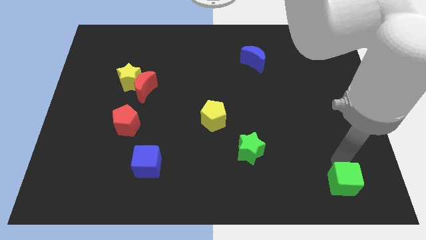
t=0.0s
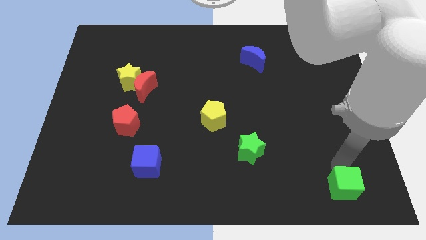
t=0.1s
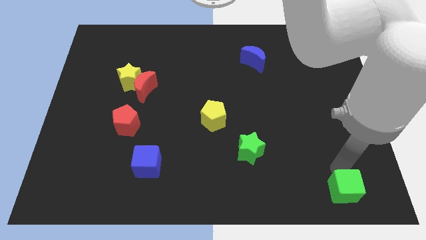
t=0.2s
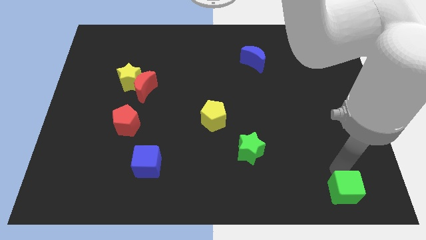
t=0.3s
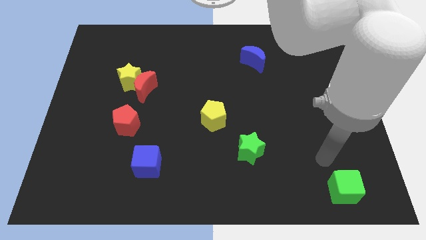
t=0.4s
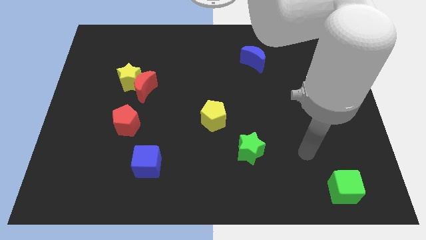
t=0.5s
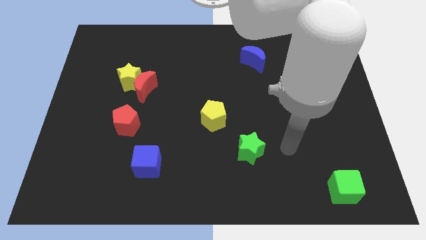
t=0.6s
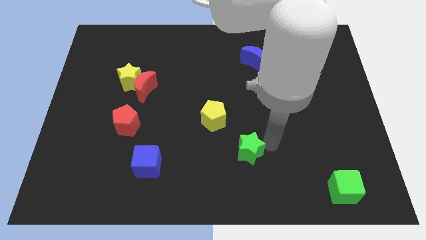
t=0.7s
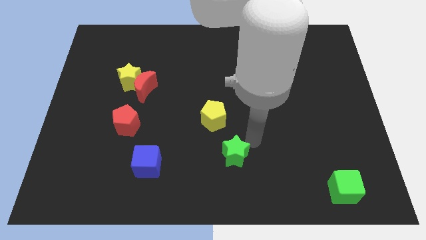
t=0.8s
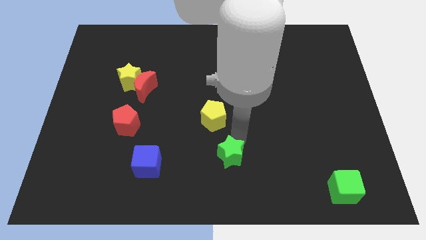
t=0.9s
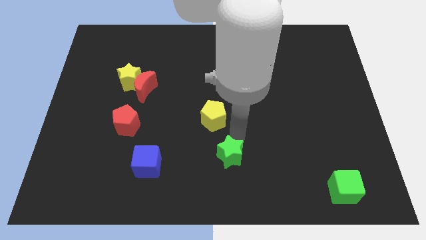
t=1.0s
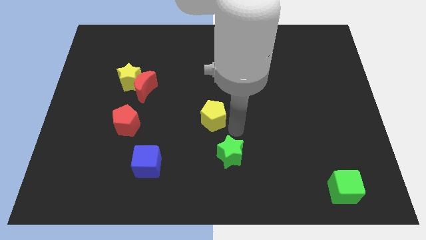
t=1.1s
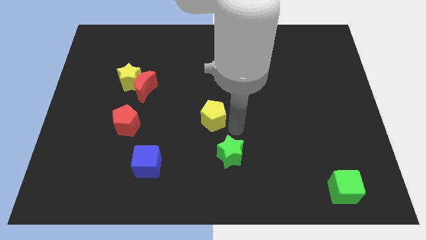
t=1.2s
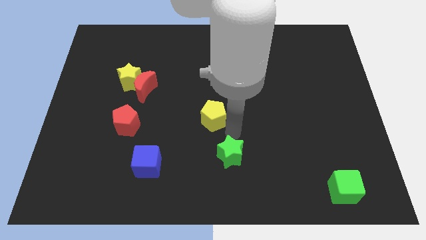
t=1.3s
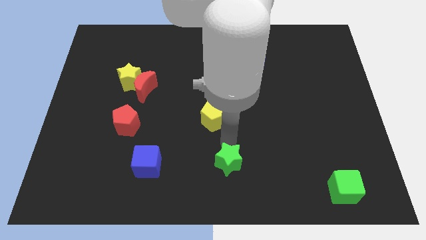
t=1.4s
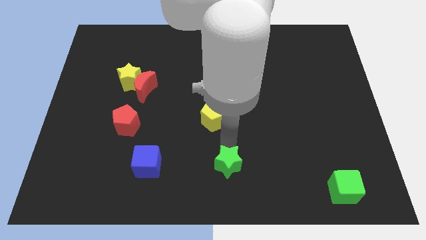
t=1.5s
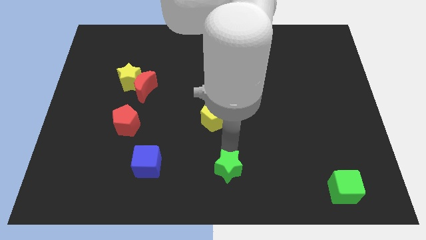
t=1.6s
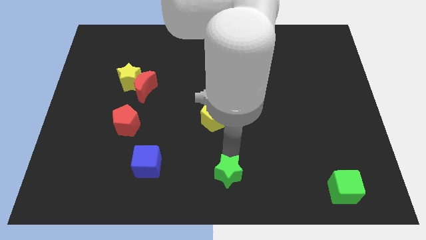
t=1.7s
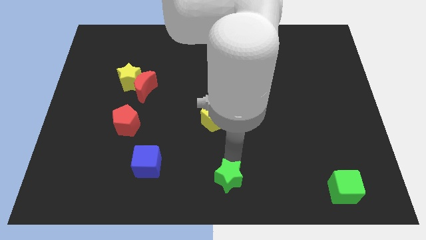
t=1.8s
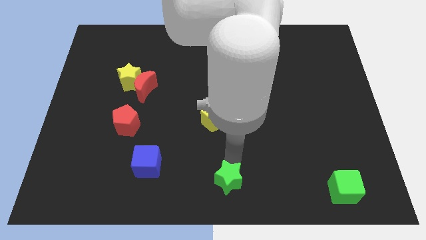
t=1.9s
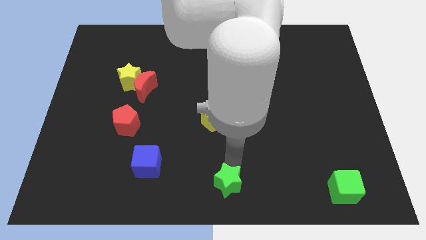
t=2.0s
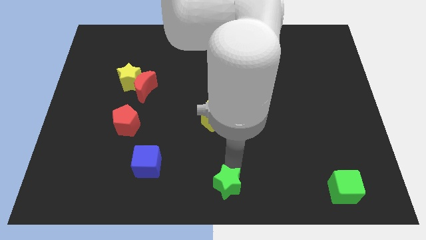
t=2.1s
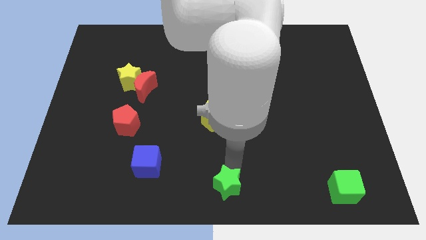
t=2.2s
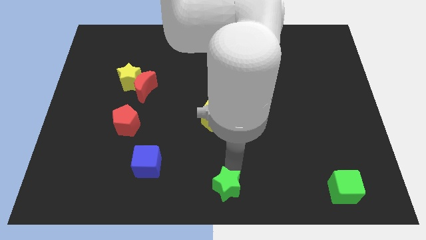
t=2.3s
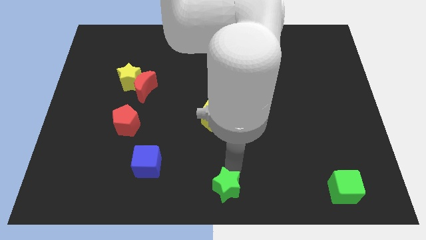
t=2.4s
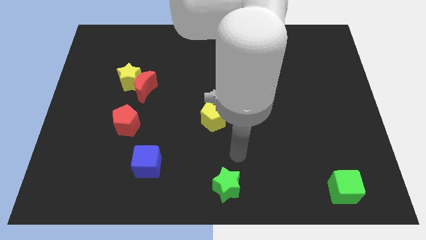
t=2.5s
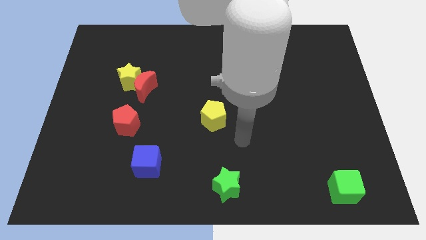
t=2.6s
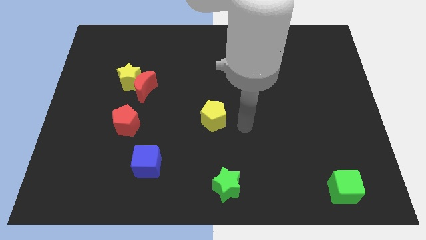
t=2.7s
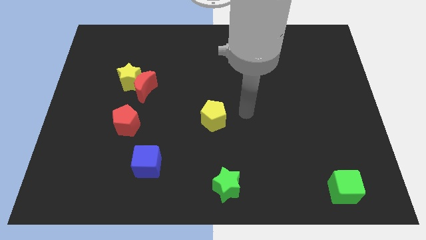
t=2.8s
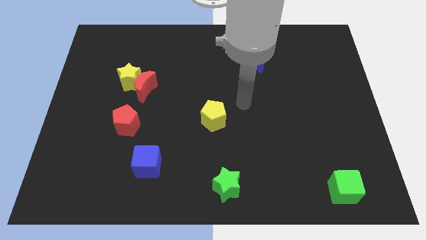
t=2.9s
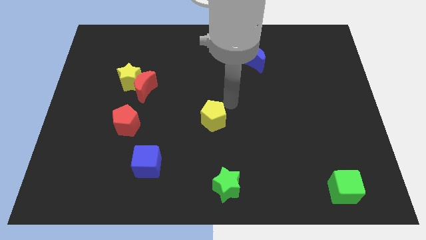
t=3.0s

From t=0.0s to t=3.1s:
place the green star at the bottom center of the board

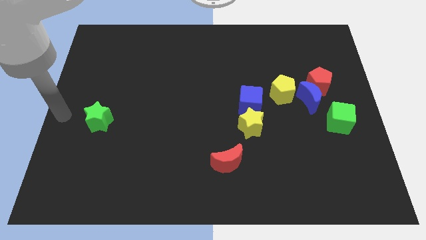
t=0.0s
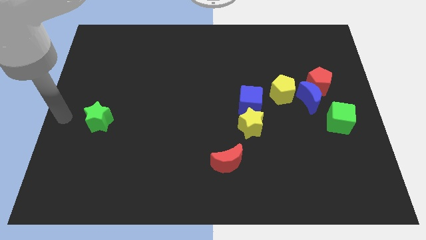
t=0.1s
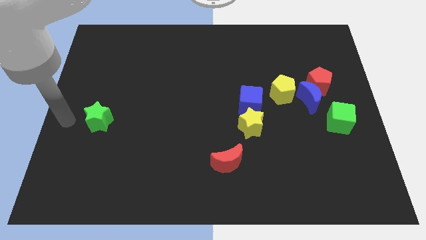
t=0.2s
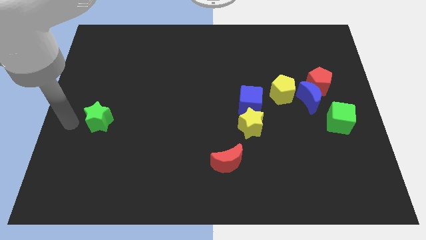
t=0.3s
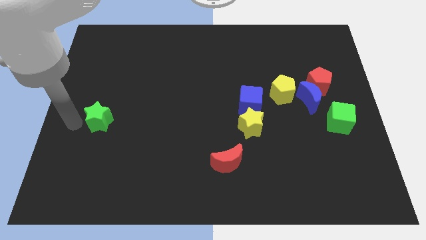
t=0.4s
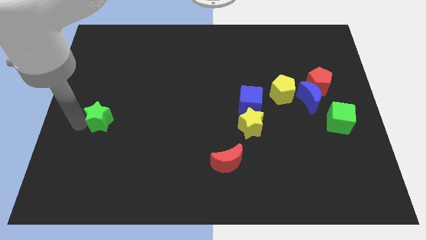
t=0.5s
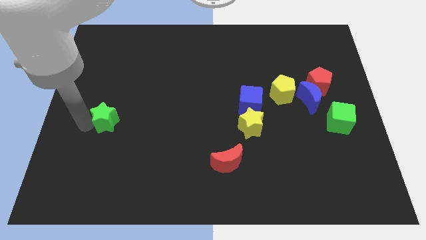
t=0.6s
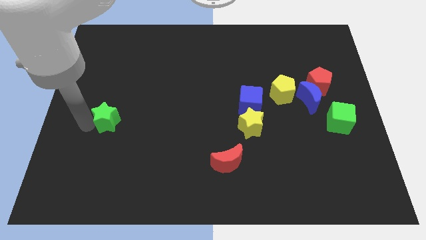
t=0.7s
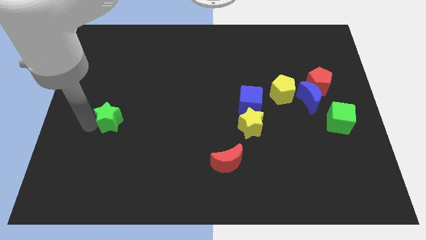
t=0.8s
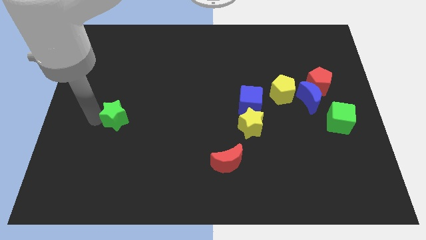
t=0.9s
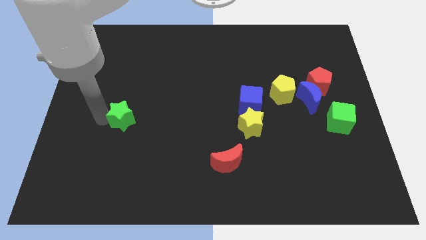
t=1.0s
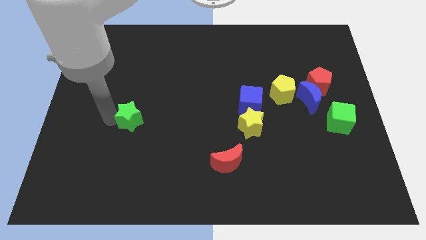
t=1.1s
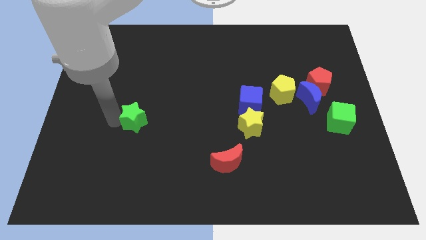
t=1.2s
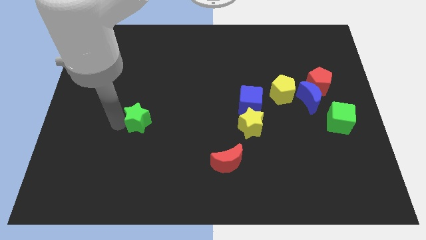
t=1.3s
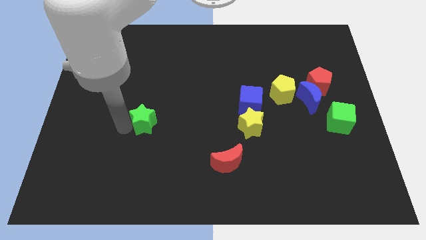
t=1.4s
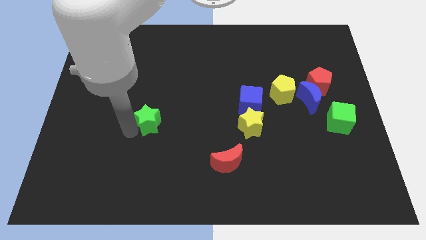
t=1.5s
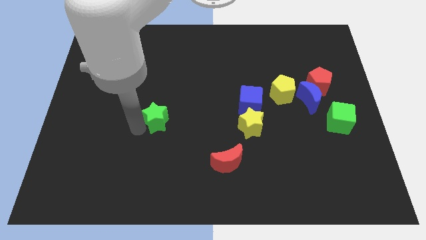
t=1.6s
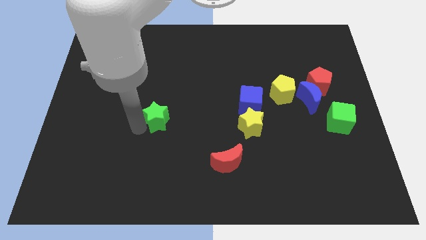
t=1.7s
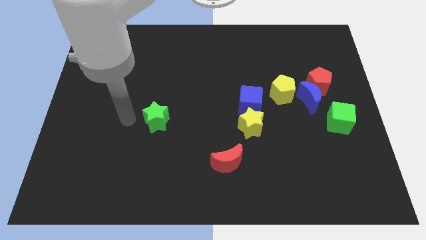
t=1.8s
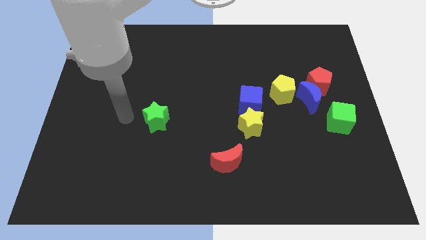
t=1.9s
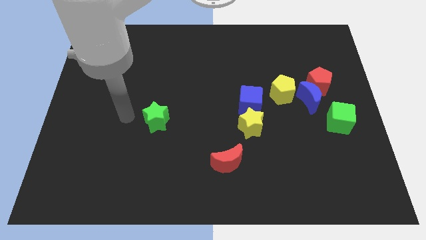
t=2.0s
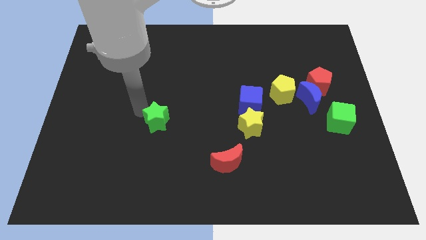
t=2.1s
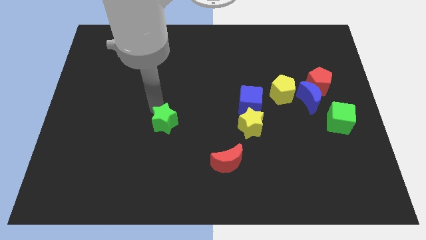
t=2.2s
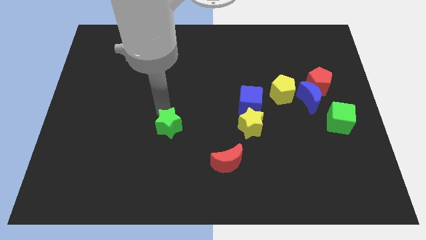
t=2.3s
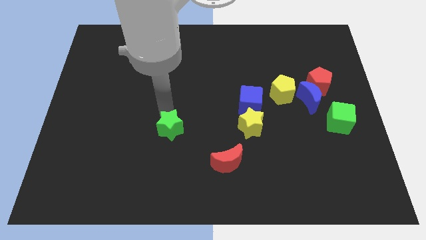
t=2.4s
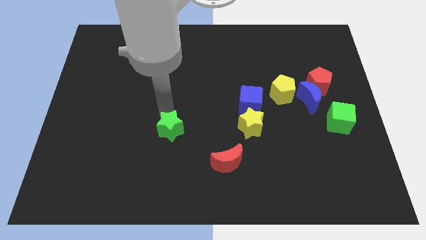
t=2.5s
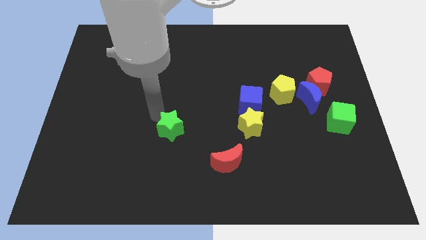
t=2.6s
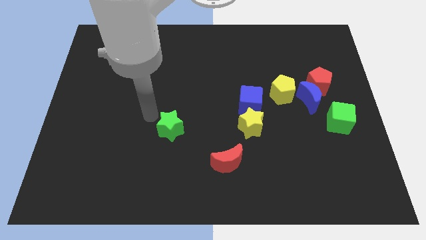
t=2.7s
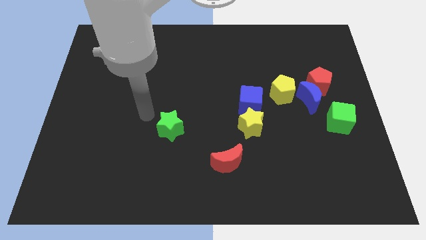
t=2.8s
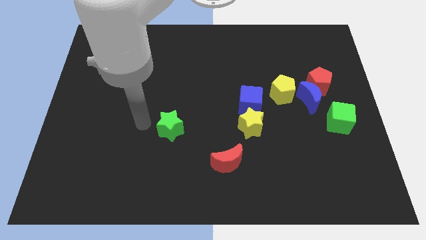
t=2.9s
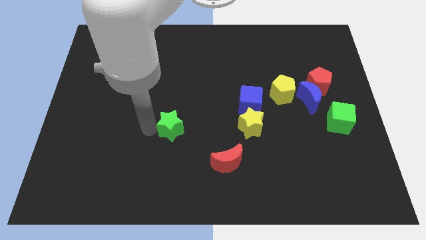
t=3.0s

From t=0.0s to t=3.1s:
put the green star parallel to the yellow star

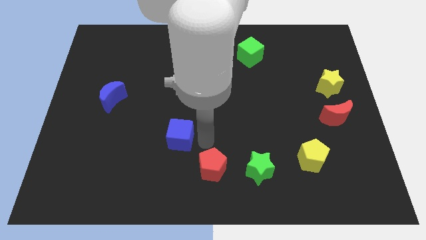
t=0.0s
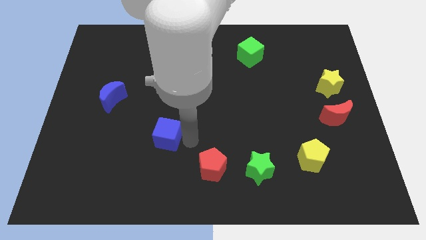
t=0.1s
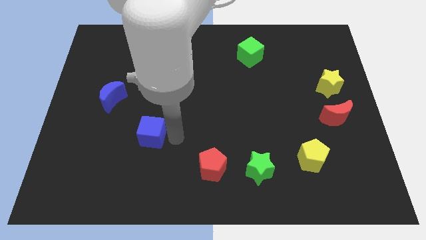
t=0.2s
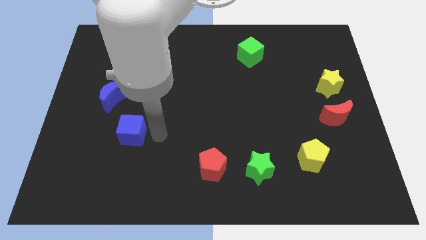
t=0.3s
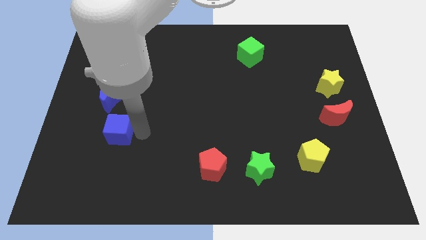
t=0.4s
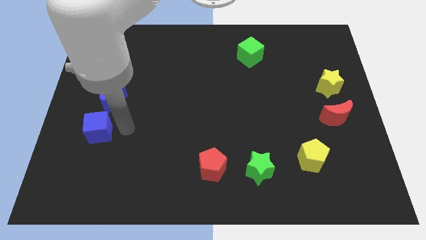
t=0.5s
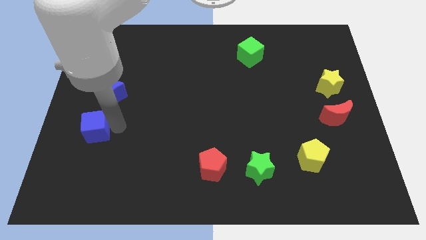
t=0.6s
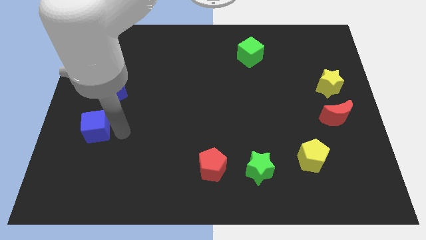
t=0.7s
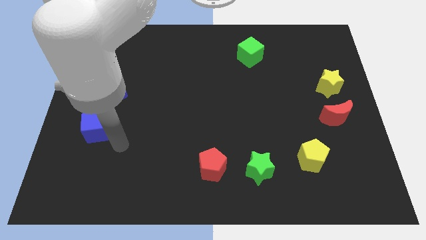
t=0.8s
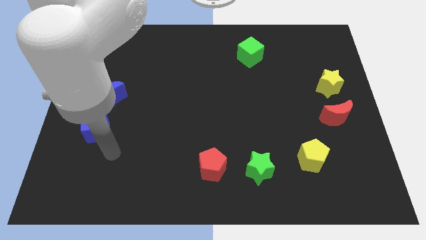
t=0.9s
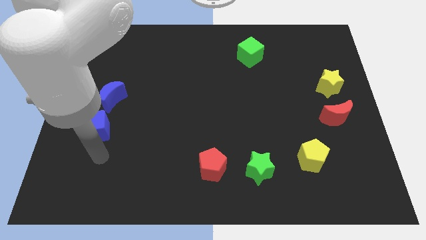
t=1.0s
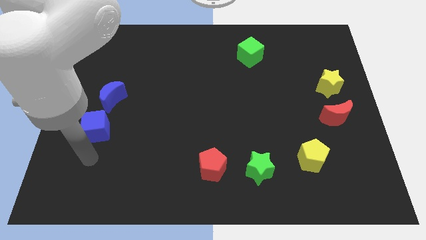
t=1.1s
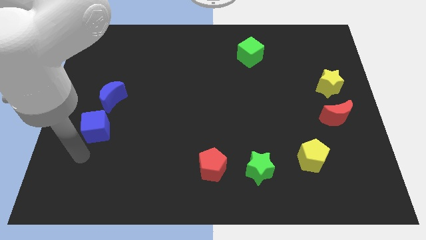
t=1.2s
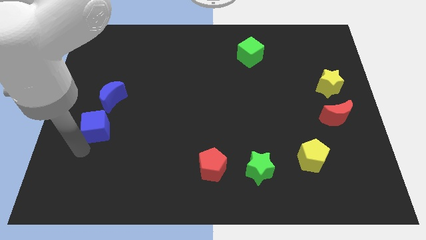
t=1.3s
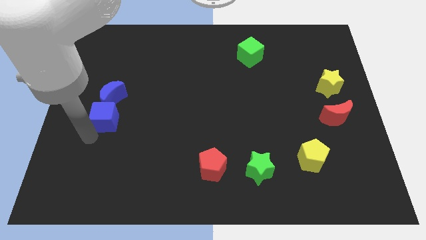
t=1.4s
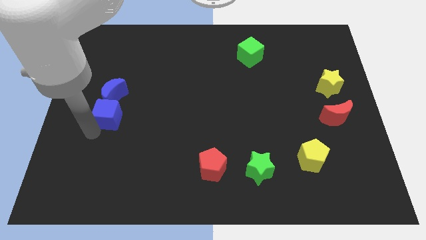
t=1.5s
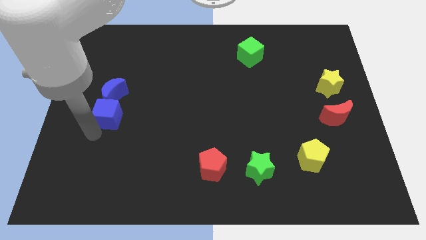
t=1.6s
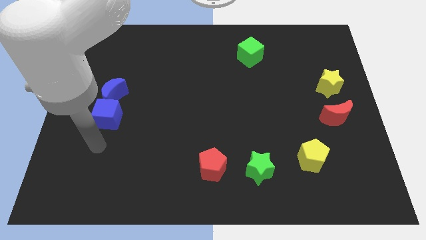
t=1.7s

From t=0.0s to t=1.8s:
move the blue cube into the blue crescent

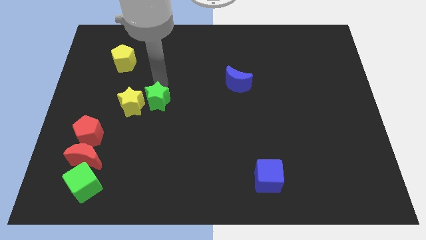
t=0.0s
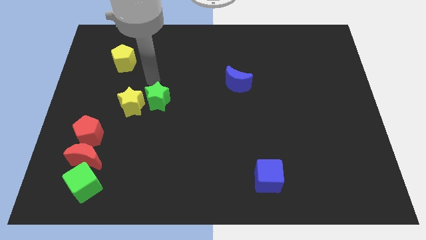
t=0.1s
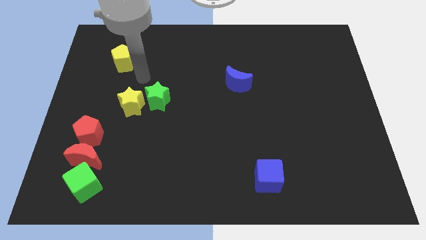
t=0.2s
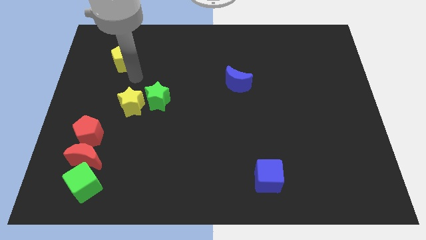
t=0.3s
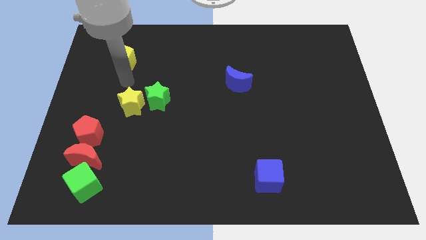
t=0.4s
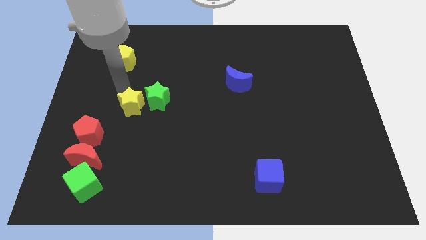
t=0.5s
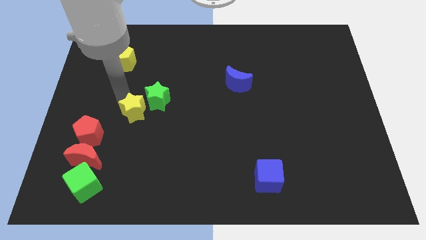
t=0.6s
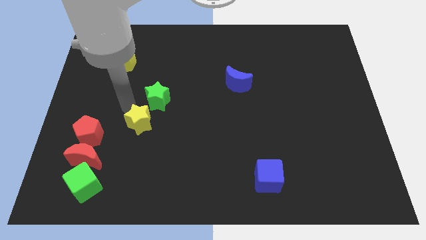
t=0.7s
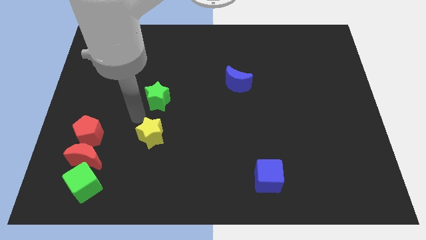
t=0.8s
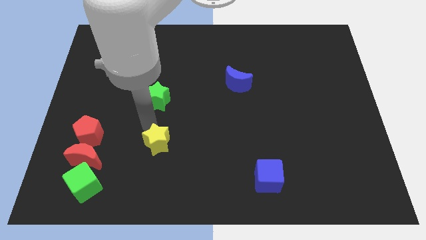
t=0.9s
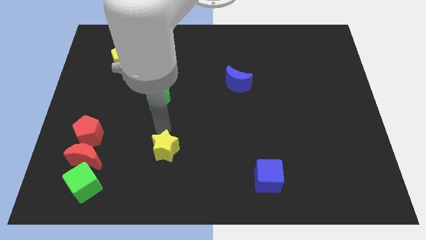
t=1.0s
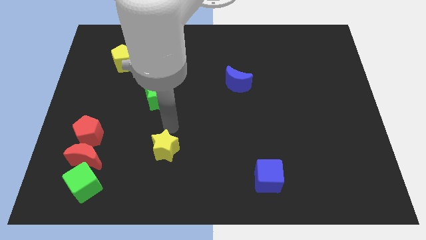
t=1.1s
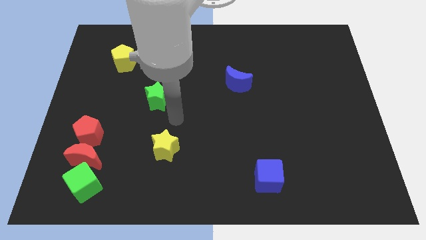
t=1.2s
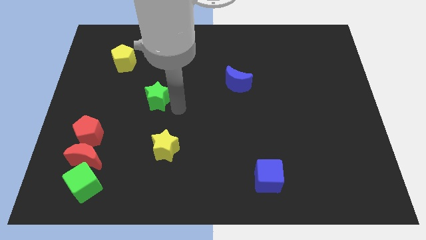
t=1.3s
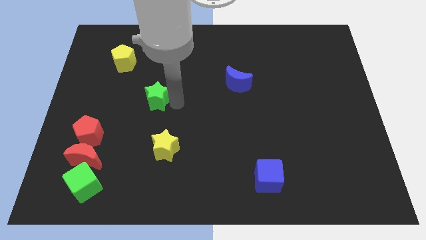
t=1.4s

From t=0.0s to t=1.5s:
move the yellow star away from the green star
